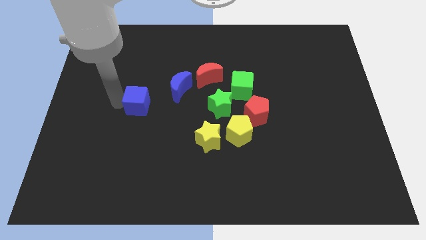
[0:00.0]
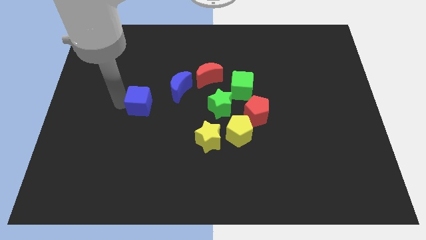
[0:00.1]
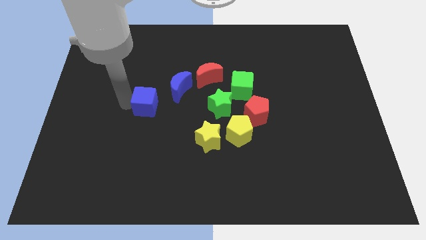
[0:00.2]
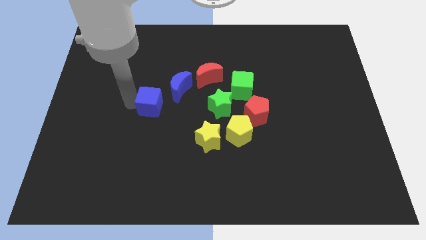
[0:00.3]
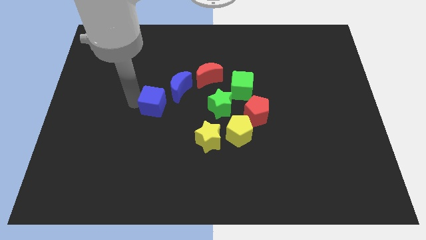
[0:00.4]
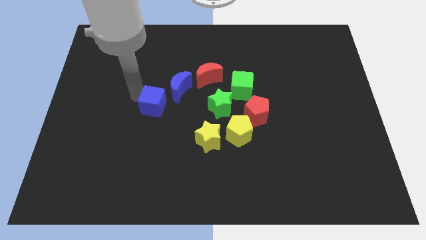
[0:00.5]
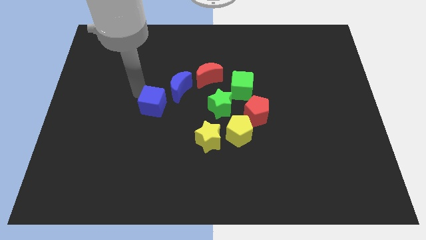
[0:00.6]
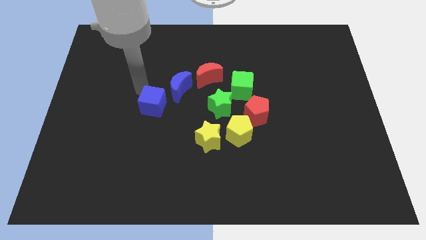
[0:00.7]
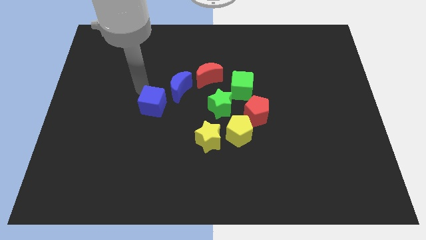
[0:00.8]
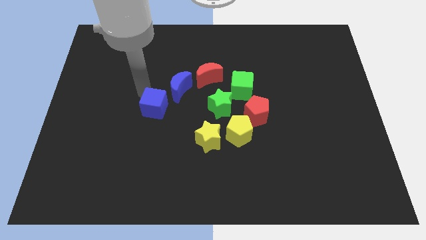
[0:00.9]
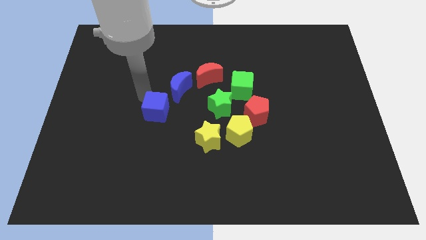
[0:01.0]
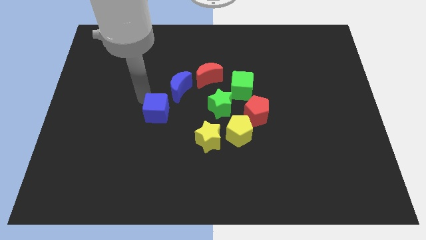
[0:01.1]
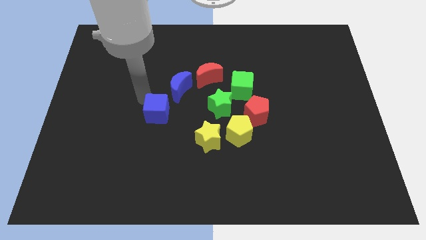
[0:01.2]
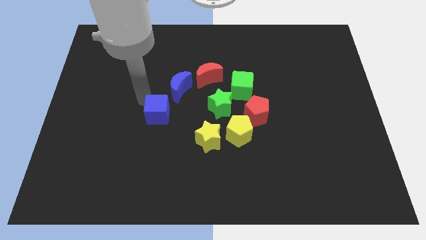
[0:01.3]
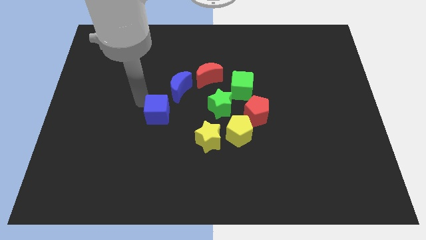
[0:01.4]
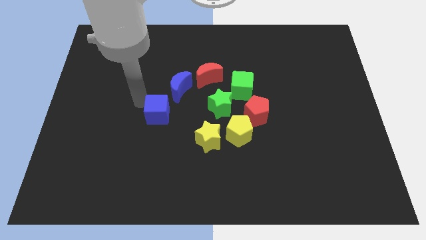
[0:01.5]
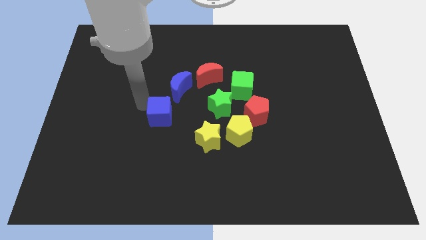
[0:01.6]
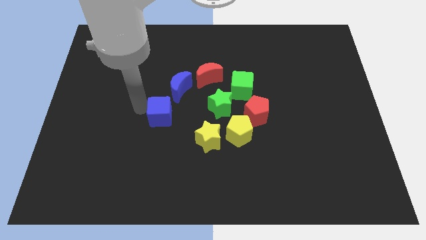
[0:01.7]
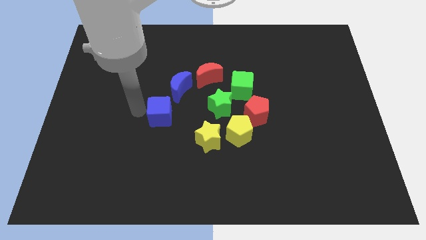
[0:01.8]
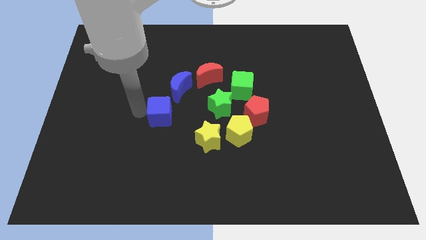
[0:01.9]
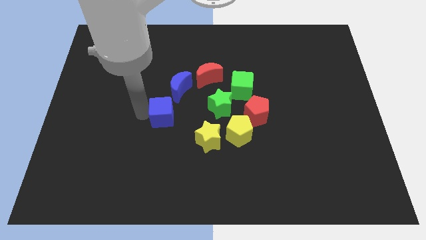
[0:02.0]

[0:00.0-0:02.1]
place the blue cube towards the bottom left side of the blue crescent

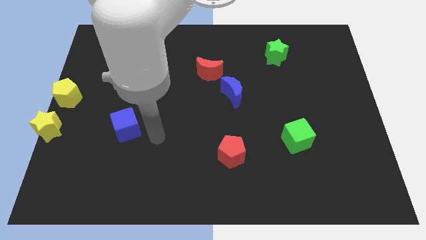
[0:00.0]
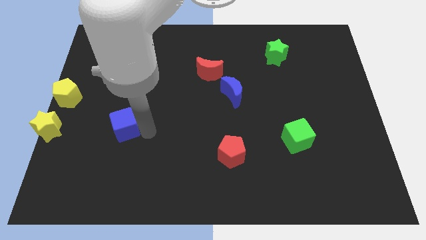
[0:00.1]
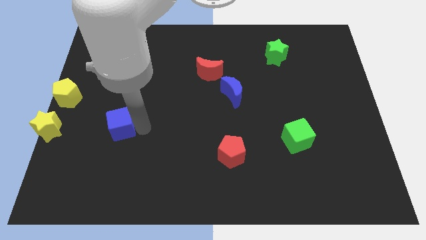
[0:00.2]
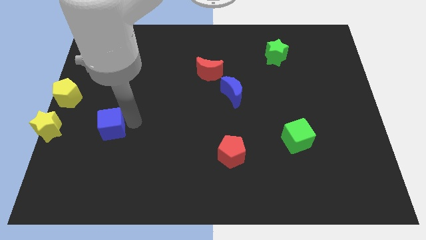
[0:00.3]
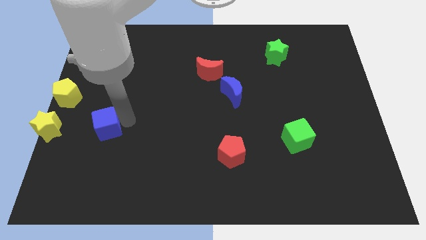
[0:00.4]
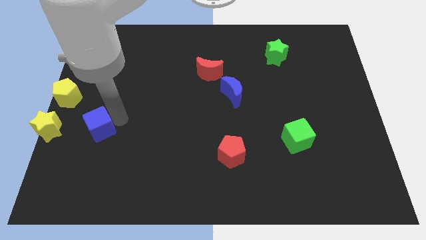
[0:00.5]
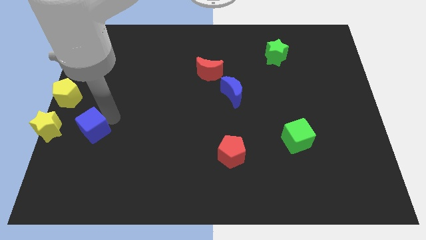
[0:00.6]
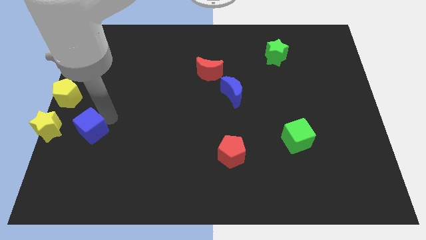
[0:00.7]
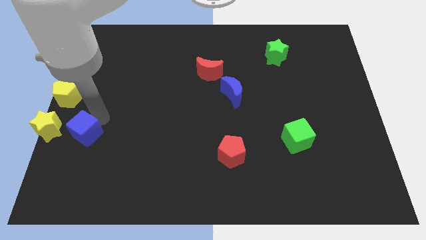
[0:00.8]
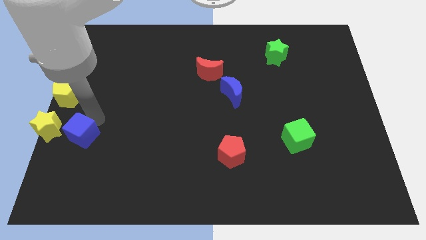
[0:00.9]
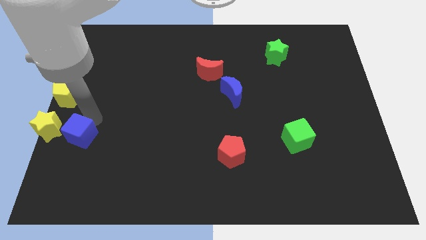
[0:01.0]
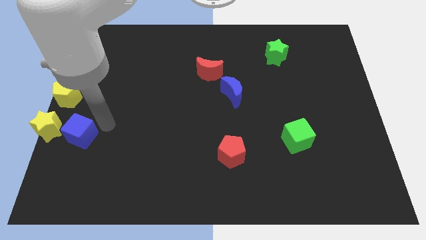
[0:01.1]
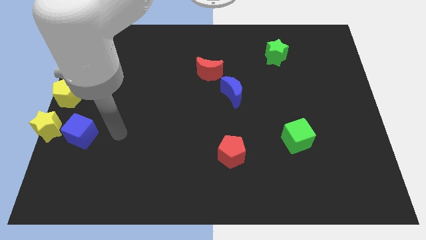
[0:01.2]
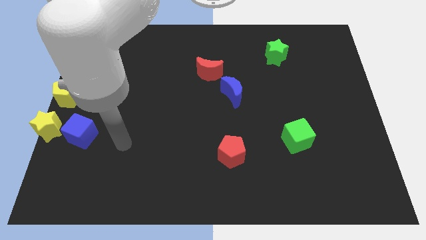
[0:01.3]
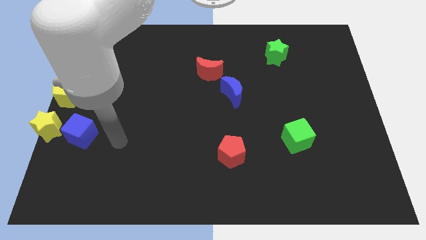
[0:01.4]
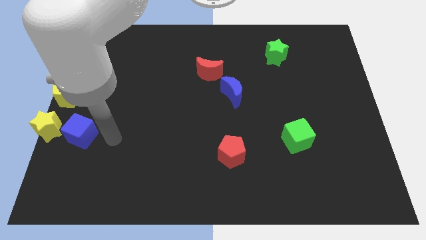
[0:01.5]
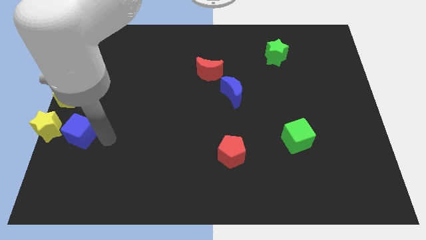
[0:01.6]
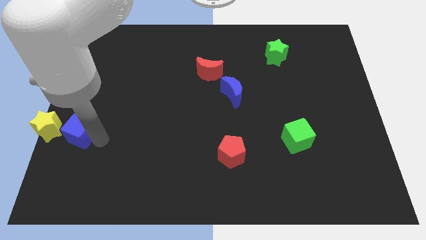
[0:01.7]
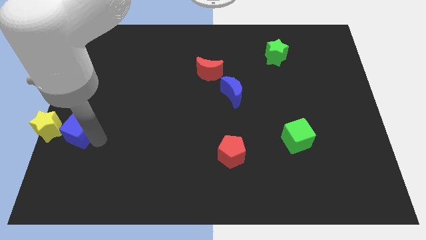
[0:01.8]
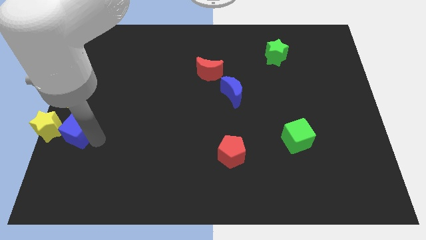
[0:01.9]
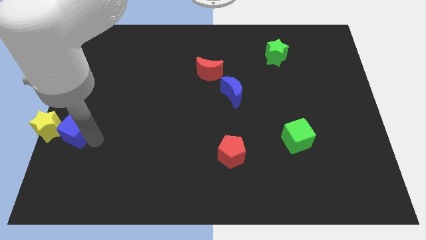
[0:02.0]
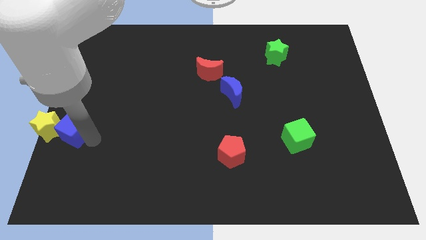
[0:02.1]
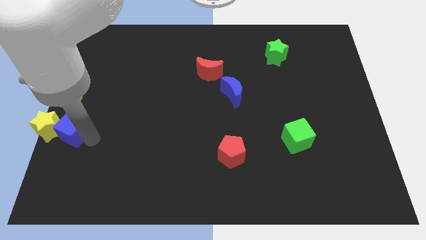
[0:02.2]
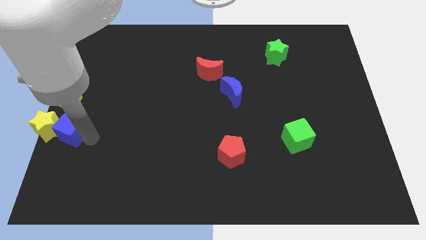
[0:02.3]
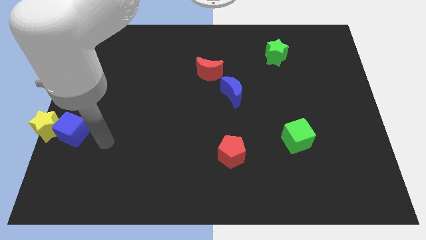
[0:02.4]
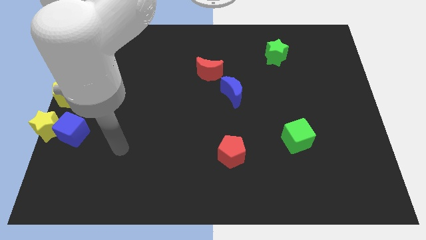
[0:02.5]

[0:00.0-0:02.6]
push the blue cube into the yellow star

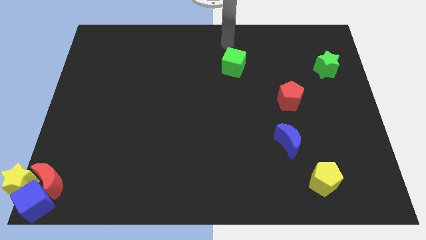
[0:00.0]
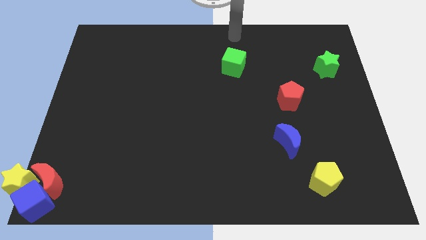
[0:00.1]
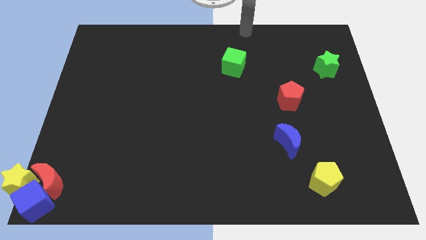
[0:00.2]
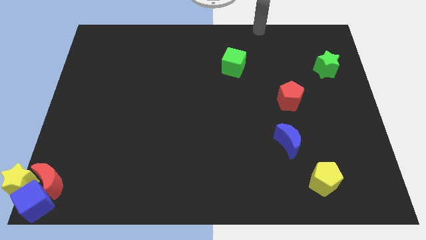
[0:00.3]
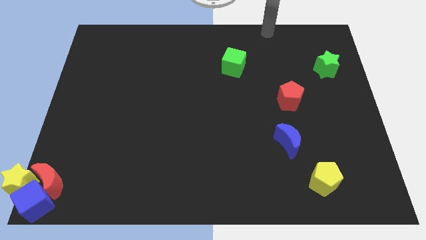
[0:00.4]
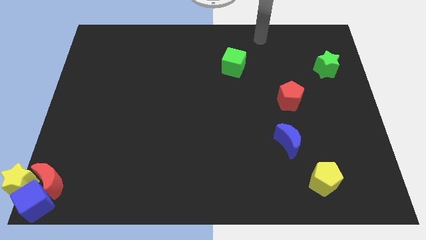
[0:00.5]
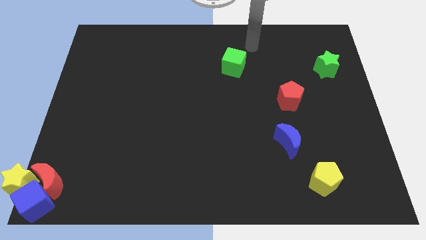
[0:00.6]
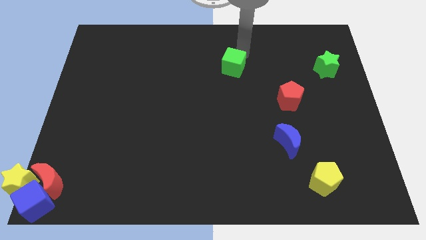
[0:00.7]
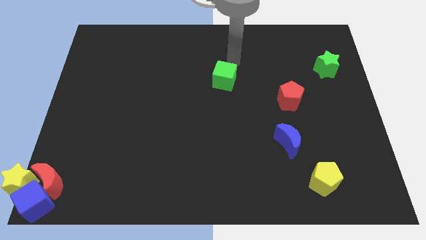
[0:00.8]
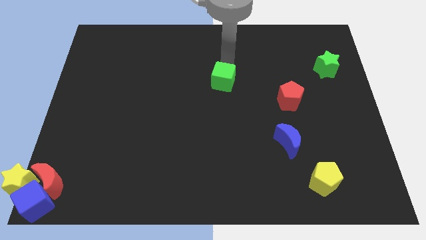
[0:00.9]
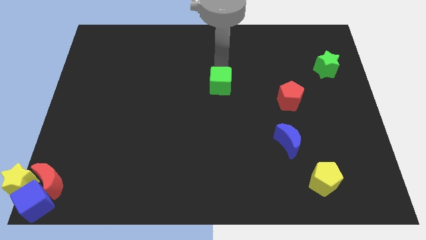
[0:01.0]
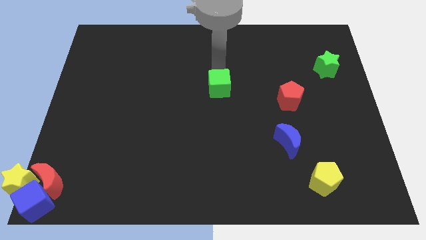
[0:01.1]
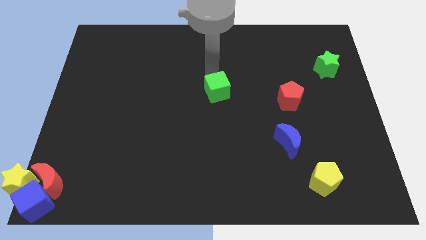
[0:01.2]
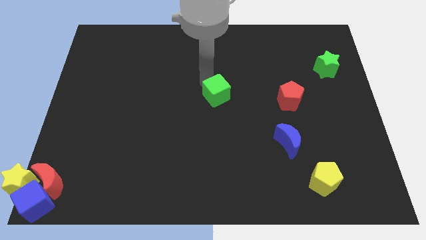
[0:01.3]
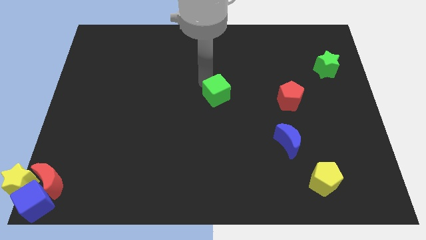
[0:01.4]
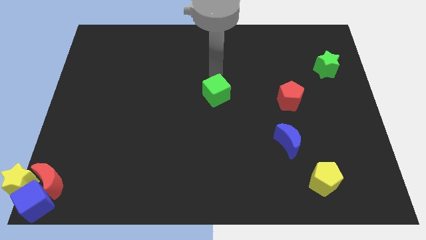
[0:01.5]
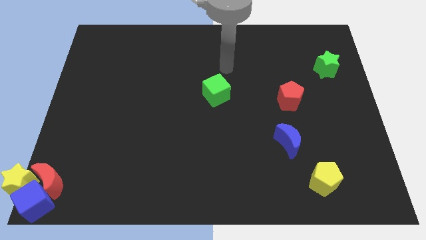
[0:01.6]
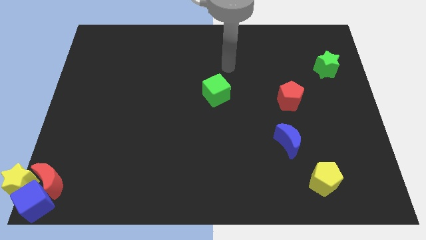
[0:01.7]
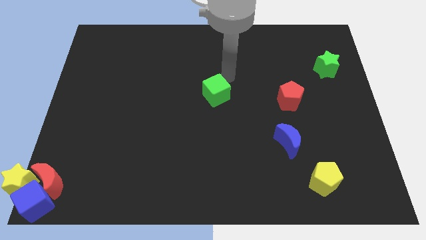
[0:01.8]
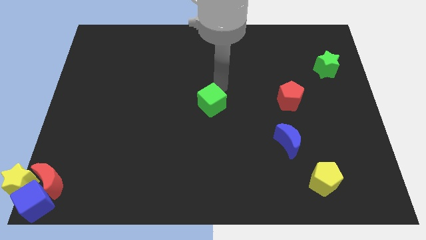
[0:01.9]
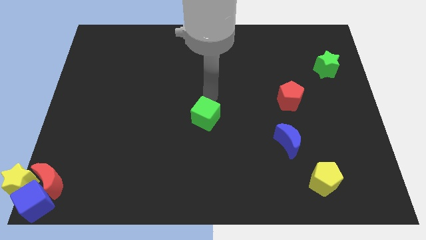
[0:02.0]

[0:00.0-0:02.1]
move the green cube to the center of the board

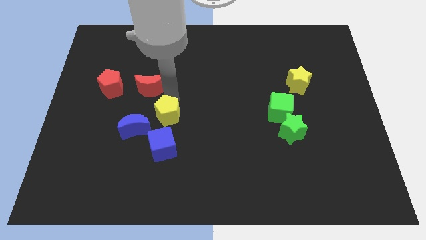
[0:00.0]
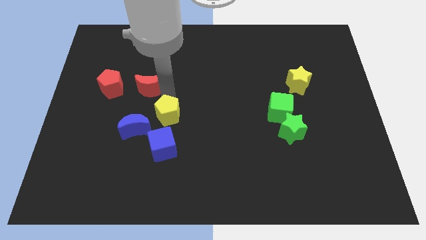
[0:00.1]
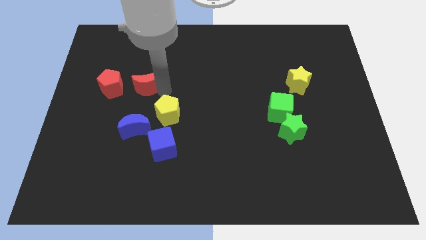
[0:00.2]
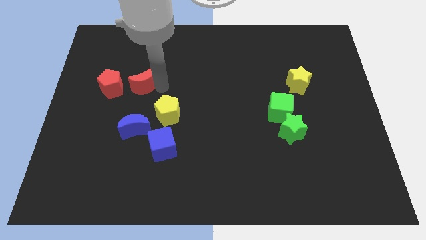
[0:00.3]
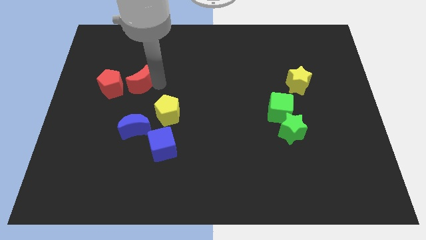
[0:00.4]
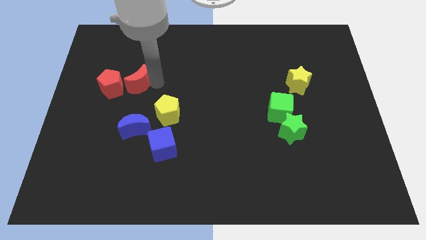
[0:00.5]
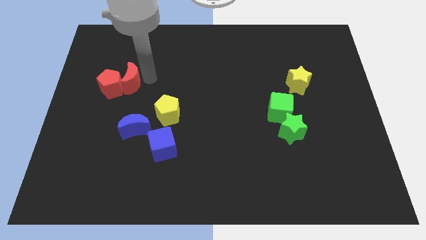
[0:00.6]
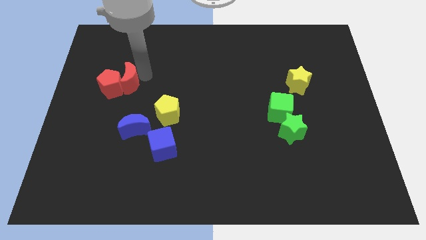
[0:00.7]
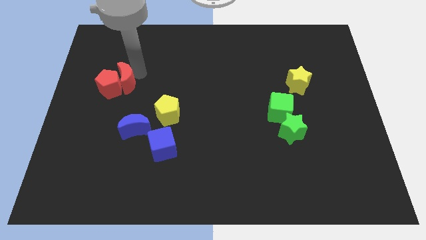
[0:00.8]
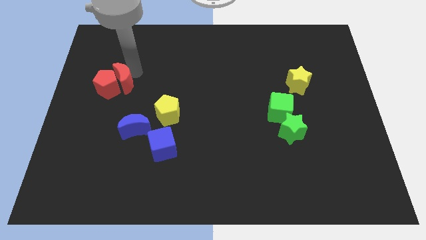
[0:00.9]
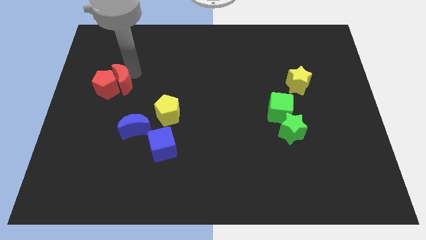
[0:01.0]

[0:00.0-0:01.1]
push the red crescent into the red pentagon

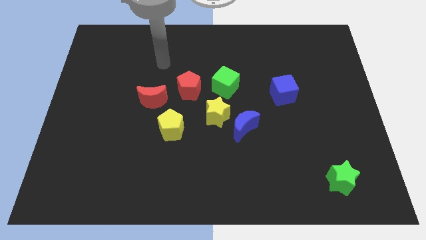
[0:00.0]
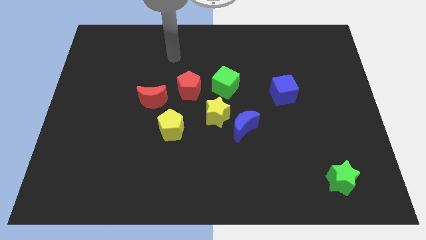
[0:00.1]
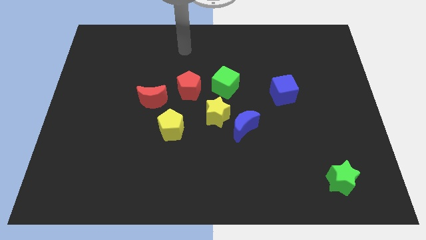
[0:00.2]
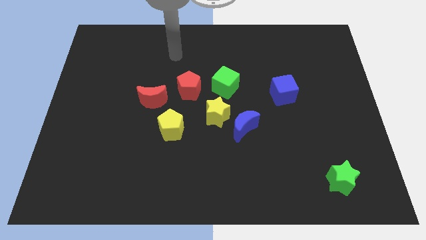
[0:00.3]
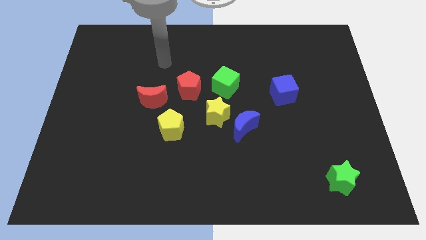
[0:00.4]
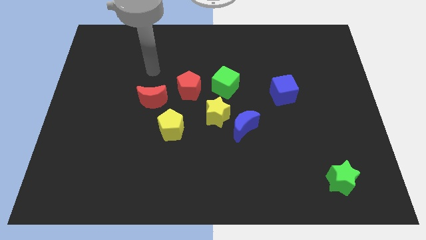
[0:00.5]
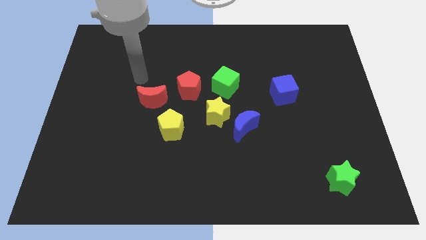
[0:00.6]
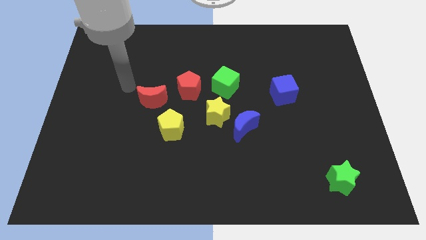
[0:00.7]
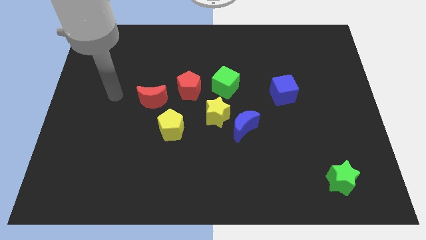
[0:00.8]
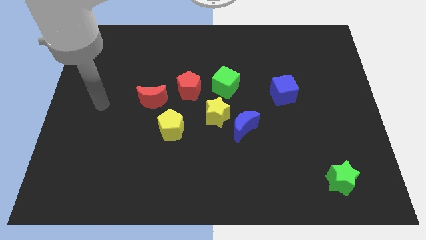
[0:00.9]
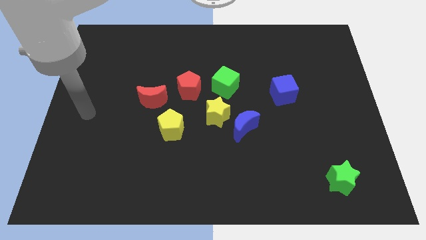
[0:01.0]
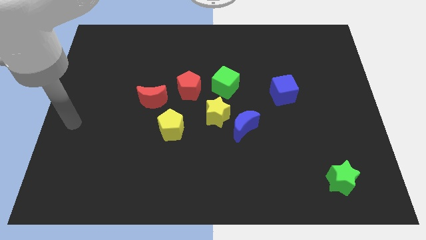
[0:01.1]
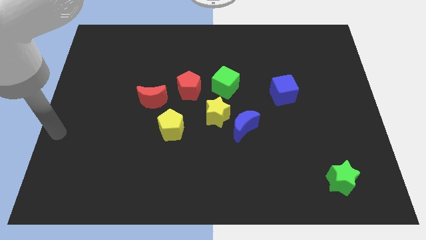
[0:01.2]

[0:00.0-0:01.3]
place arm on the center left
